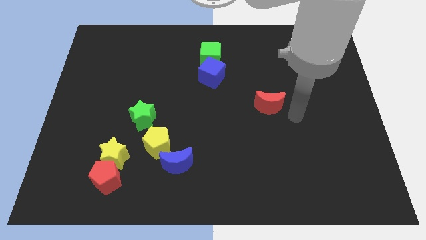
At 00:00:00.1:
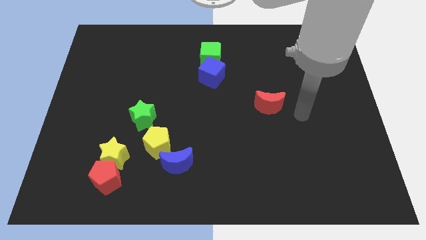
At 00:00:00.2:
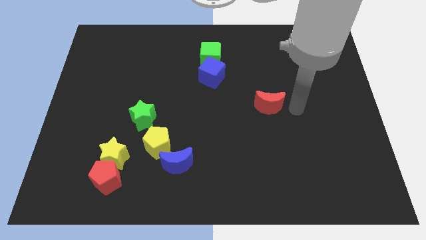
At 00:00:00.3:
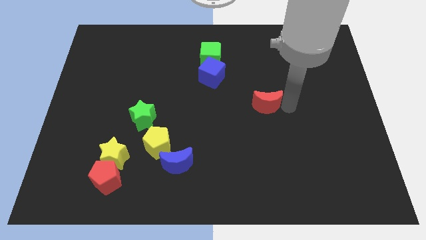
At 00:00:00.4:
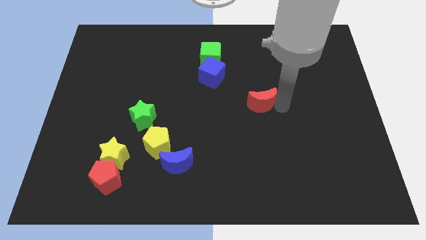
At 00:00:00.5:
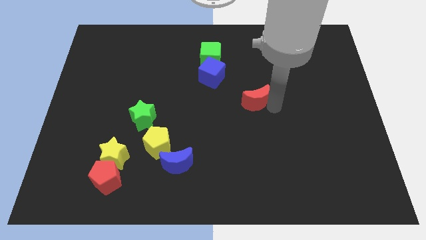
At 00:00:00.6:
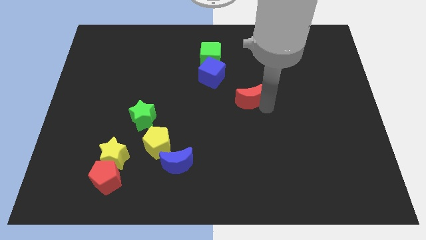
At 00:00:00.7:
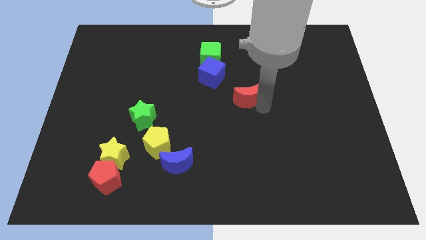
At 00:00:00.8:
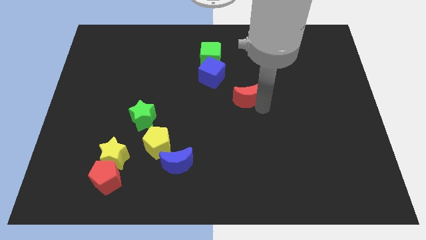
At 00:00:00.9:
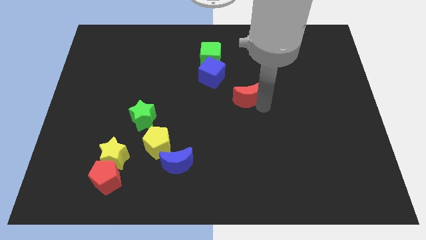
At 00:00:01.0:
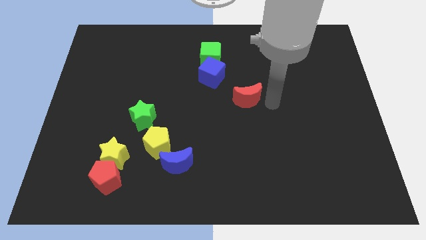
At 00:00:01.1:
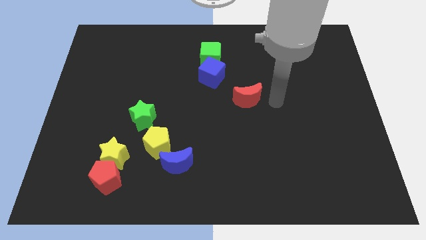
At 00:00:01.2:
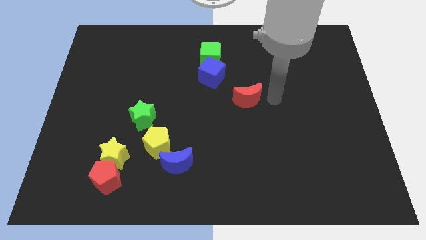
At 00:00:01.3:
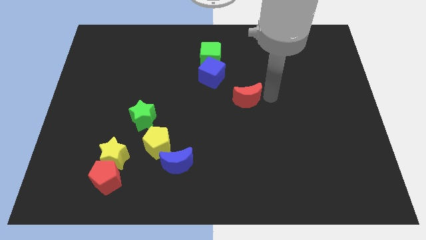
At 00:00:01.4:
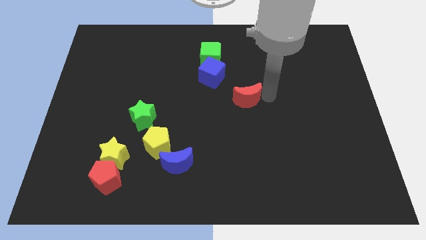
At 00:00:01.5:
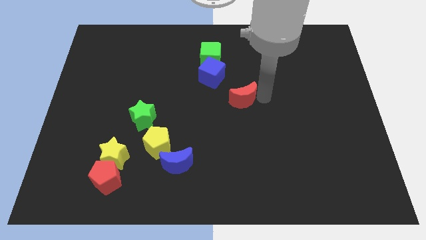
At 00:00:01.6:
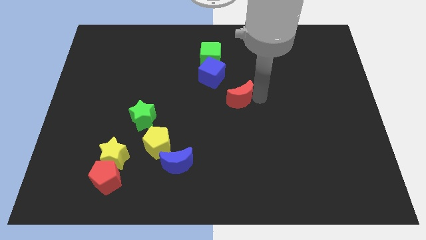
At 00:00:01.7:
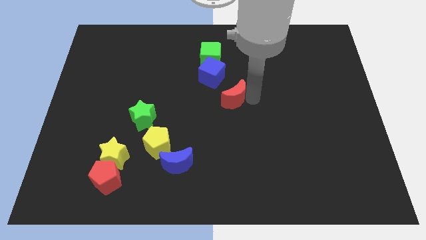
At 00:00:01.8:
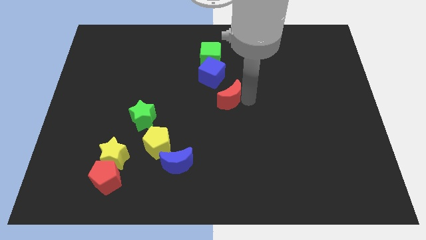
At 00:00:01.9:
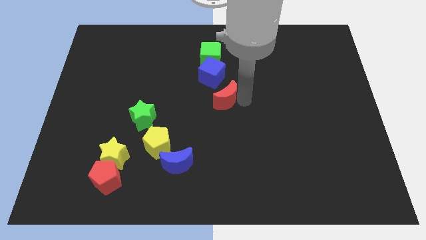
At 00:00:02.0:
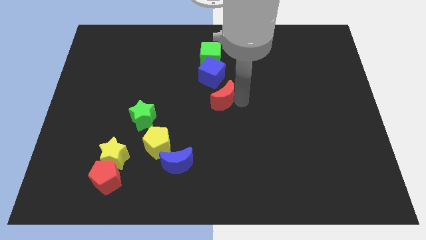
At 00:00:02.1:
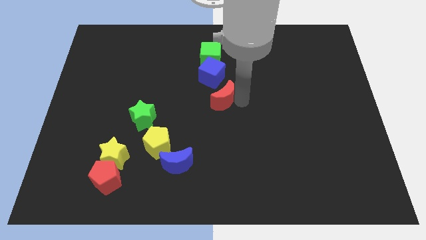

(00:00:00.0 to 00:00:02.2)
move red crescent towards the blue cube

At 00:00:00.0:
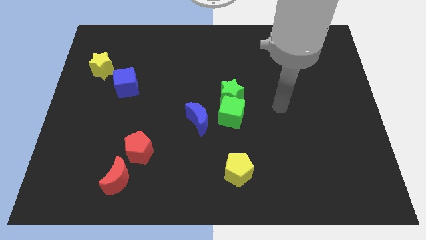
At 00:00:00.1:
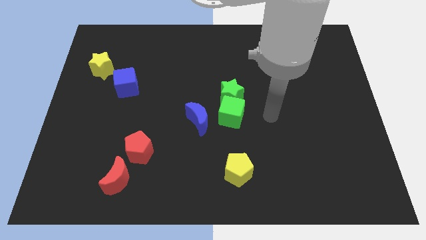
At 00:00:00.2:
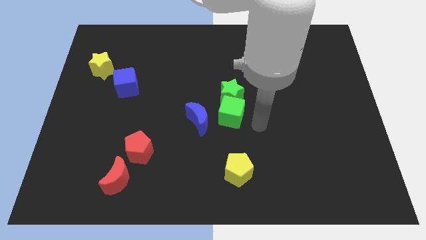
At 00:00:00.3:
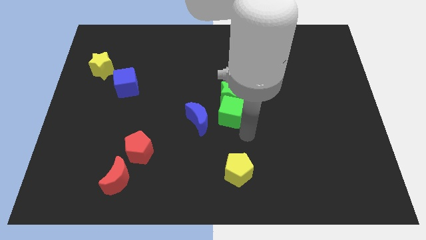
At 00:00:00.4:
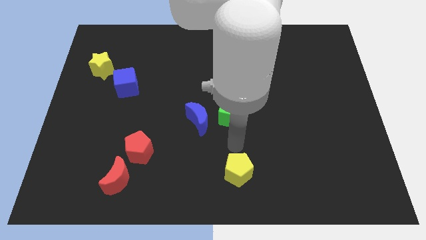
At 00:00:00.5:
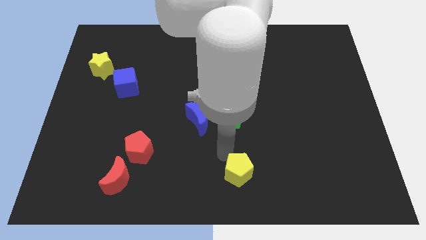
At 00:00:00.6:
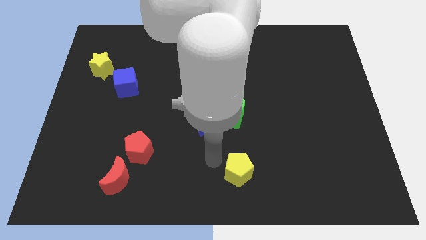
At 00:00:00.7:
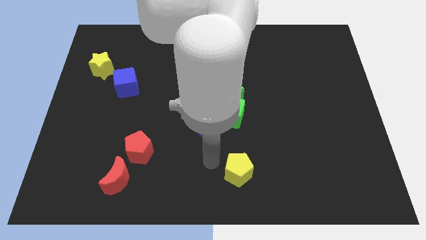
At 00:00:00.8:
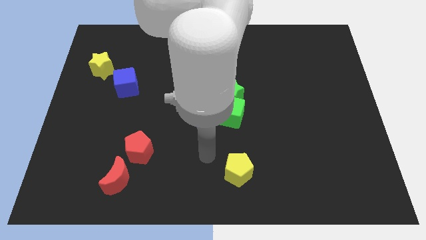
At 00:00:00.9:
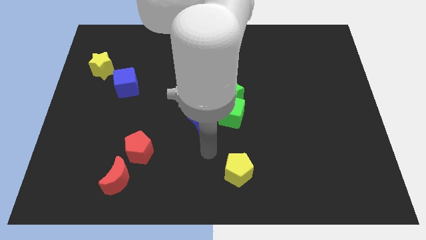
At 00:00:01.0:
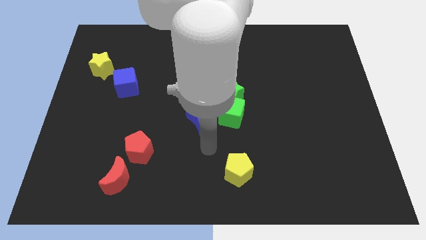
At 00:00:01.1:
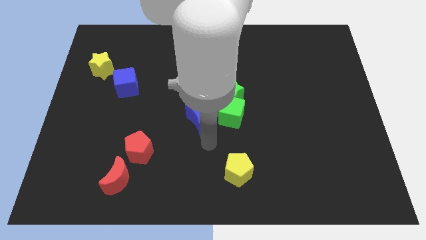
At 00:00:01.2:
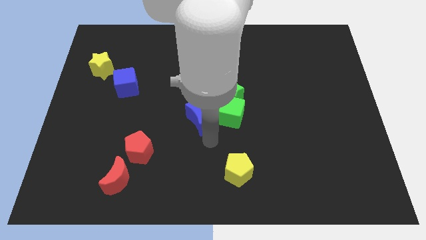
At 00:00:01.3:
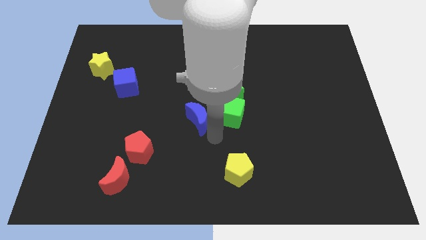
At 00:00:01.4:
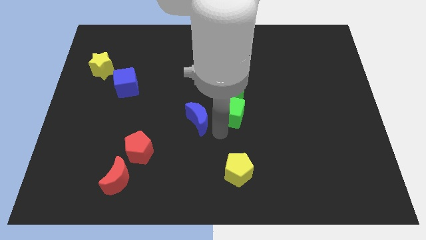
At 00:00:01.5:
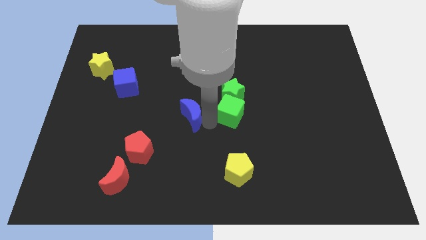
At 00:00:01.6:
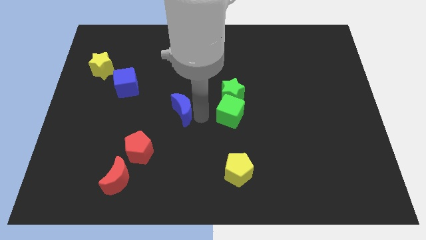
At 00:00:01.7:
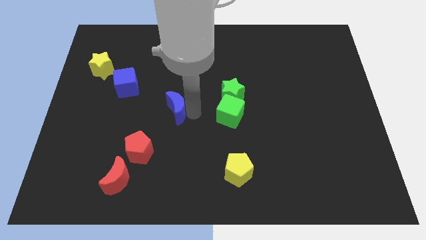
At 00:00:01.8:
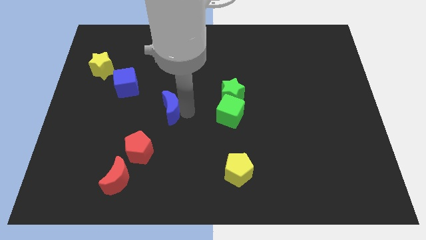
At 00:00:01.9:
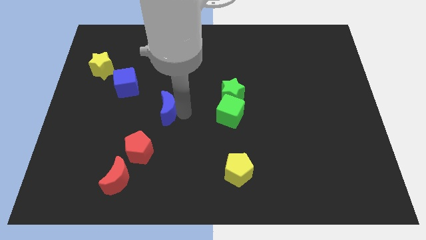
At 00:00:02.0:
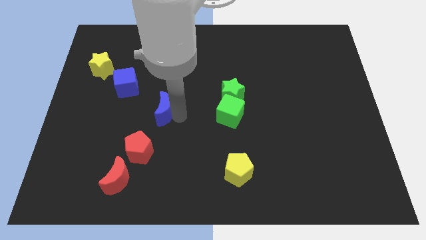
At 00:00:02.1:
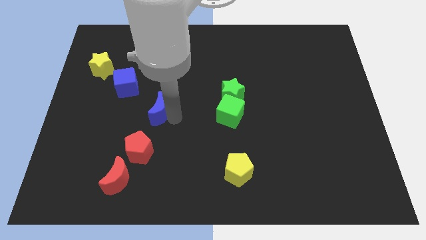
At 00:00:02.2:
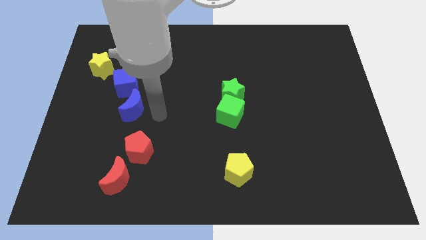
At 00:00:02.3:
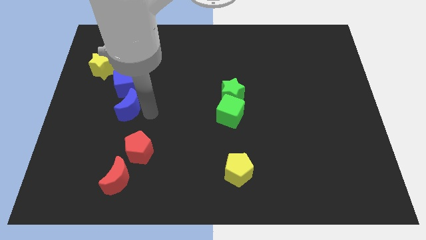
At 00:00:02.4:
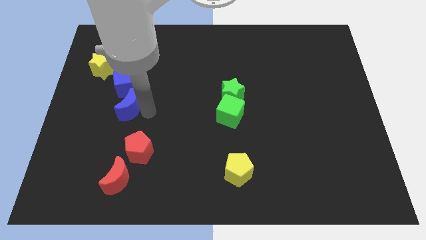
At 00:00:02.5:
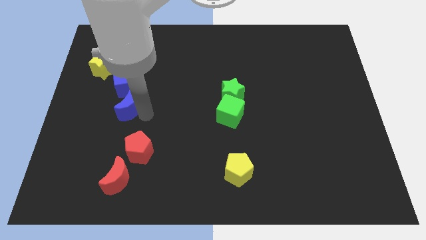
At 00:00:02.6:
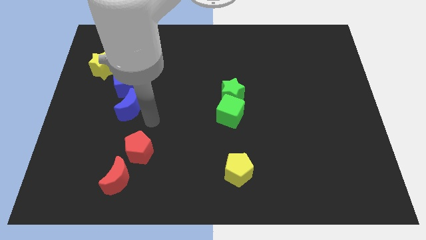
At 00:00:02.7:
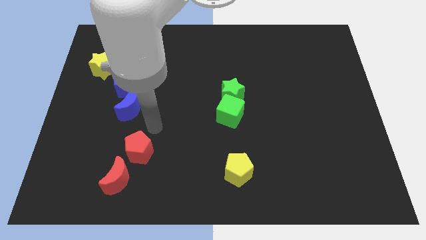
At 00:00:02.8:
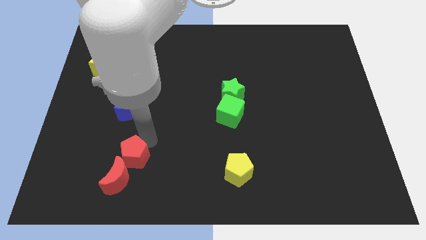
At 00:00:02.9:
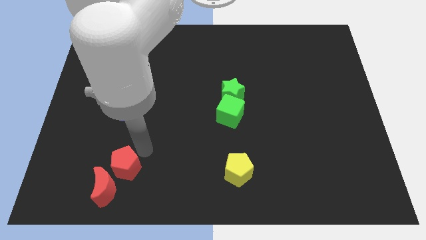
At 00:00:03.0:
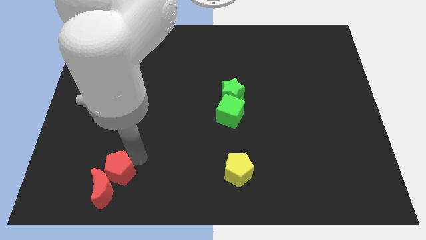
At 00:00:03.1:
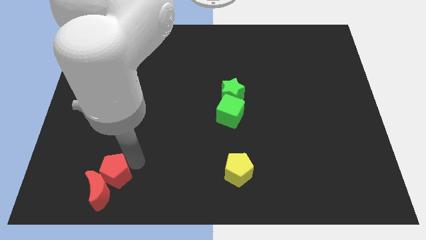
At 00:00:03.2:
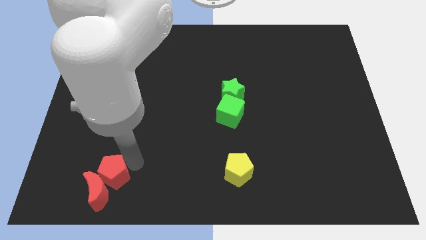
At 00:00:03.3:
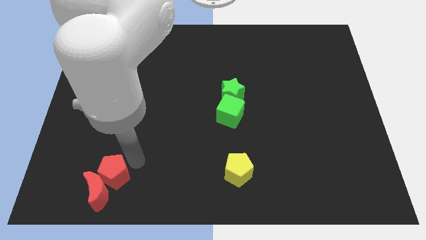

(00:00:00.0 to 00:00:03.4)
move red pentagon and red moon towards bottom left of the board

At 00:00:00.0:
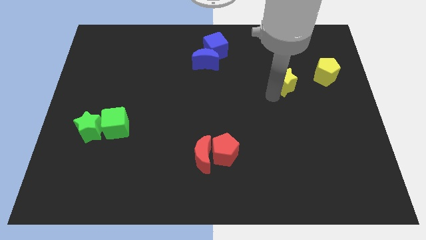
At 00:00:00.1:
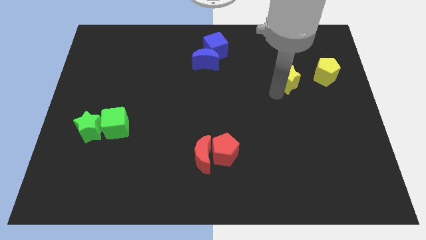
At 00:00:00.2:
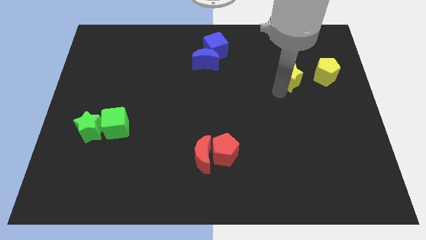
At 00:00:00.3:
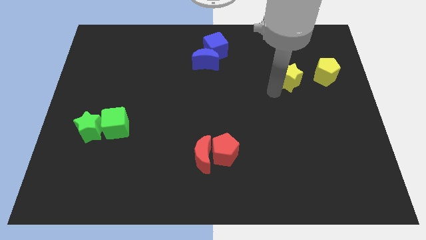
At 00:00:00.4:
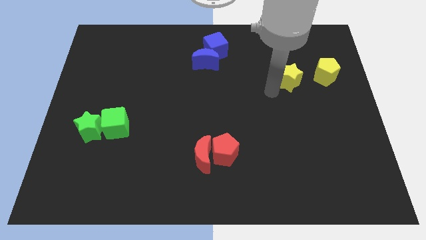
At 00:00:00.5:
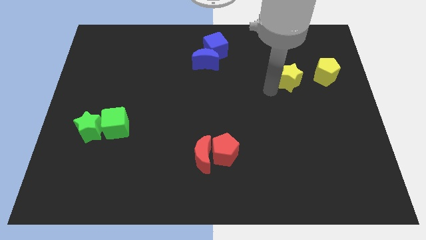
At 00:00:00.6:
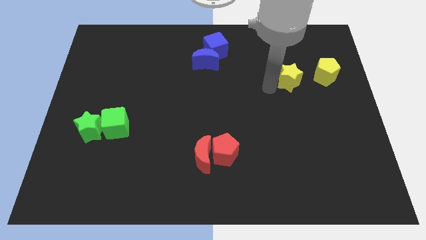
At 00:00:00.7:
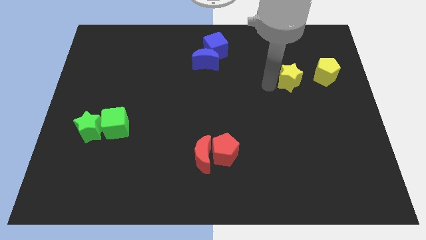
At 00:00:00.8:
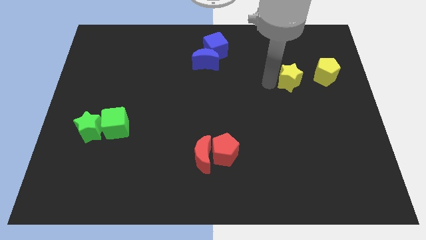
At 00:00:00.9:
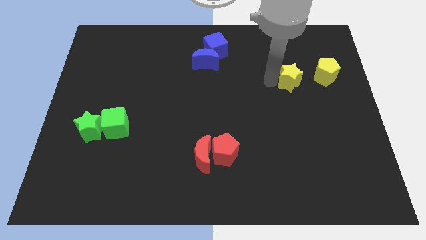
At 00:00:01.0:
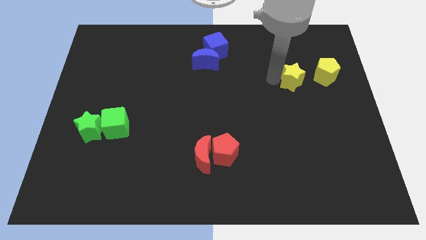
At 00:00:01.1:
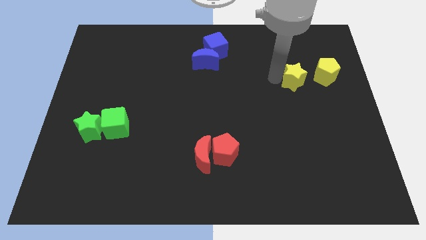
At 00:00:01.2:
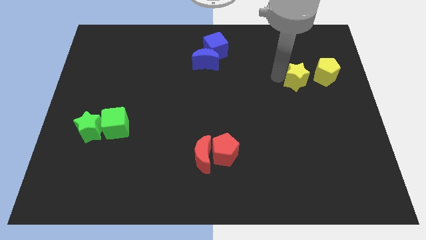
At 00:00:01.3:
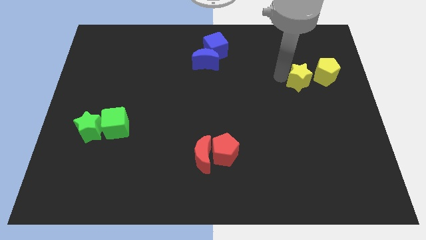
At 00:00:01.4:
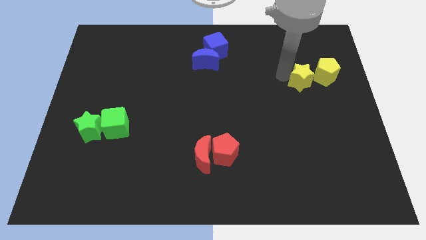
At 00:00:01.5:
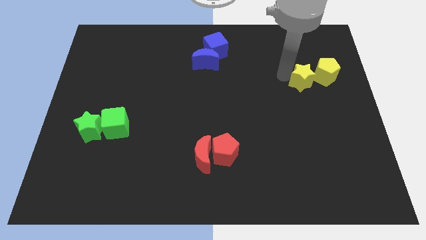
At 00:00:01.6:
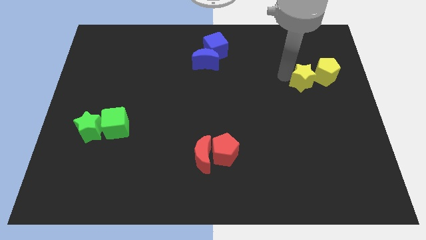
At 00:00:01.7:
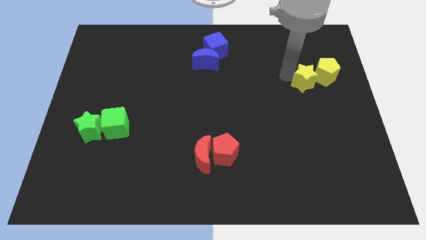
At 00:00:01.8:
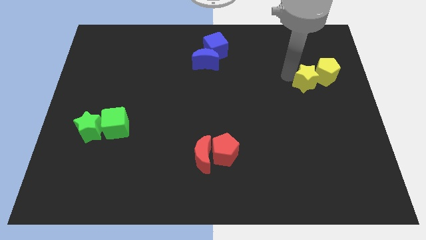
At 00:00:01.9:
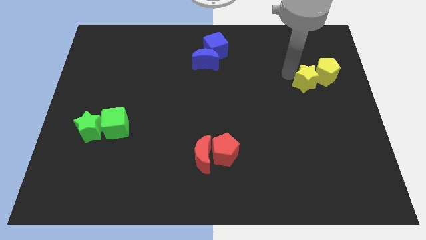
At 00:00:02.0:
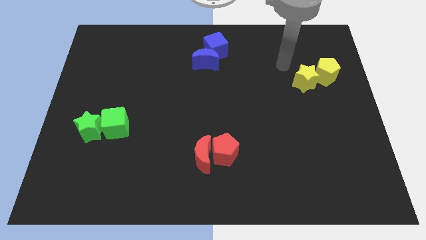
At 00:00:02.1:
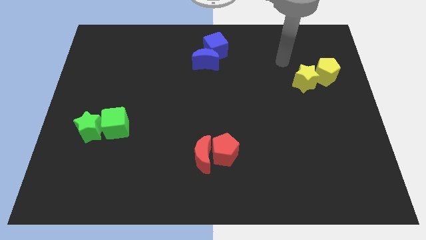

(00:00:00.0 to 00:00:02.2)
move the yellow star close to the yellow pentagon

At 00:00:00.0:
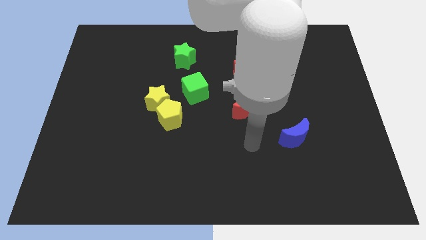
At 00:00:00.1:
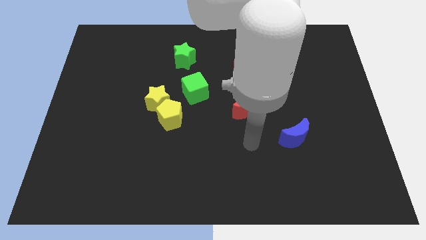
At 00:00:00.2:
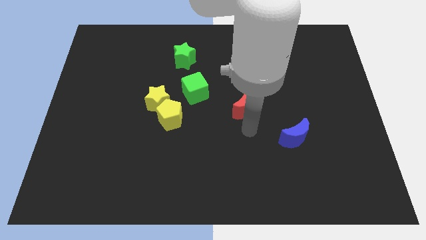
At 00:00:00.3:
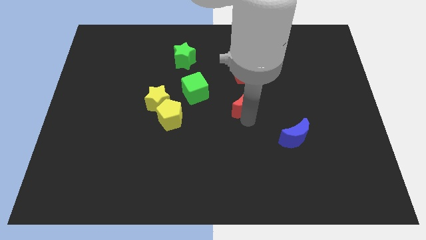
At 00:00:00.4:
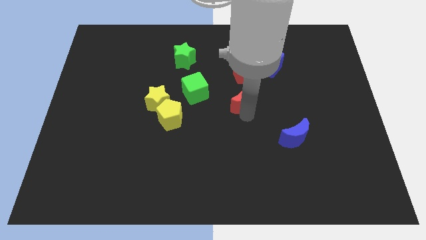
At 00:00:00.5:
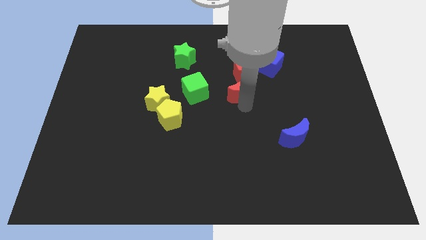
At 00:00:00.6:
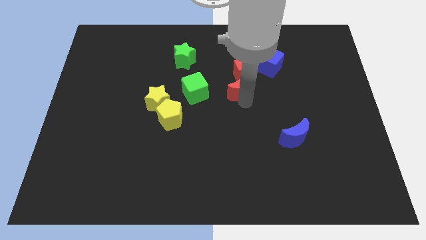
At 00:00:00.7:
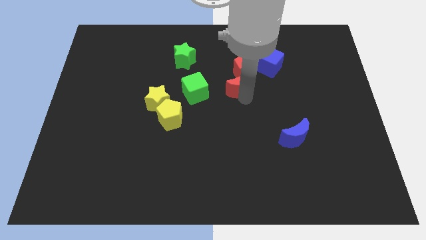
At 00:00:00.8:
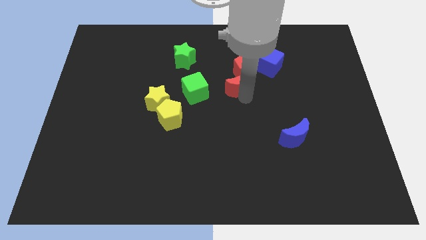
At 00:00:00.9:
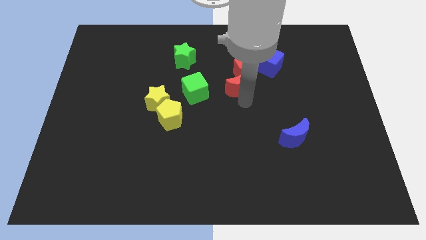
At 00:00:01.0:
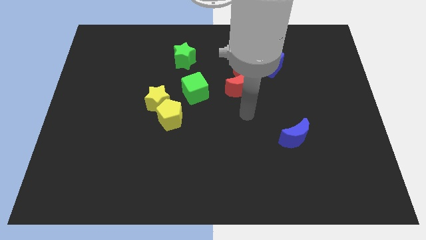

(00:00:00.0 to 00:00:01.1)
push the red crescent into the red pentagon
